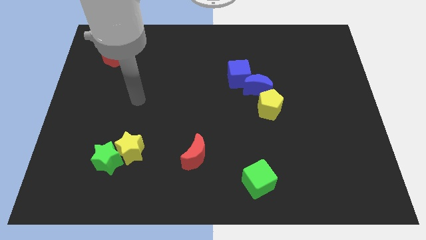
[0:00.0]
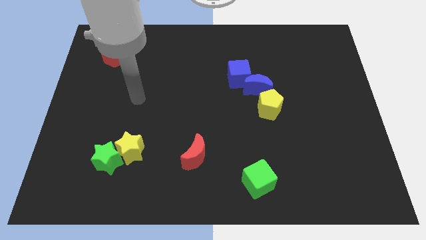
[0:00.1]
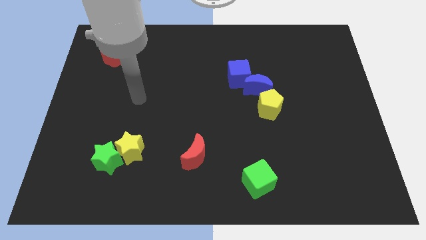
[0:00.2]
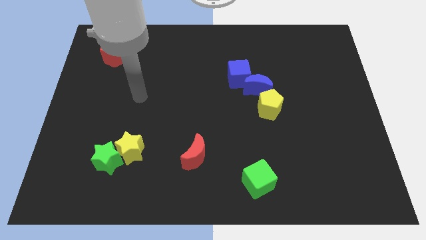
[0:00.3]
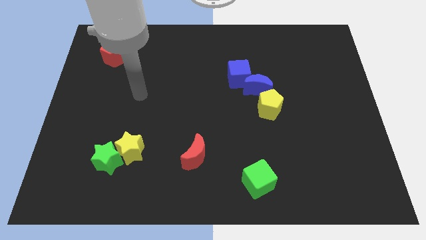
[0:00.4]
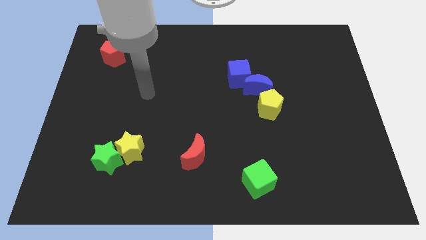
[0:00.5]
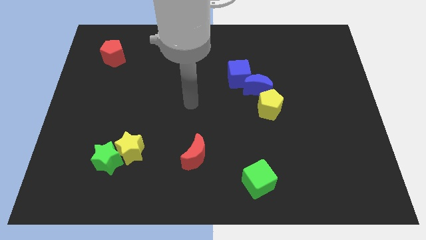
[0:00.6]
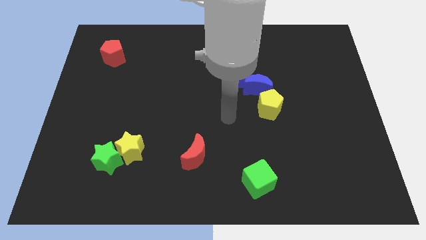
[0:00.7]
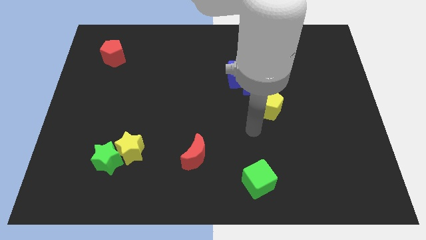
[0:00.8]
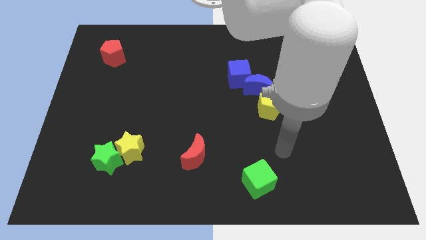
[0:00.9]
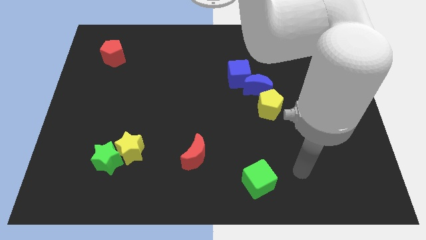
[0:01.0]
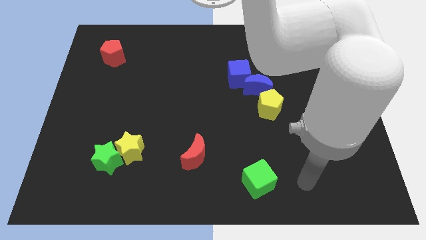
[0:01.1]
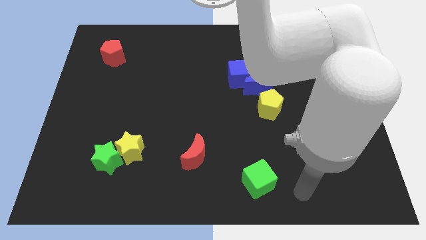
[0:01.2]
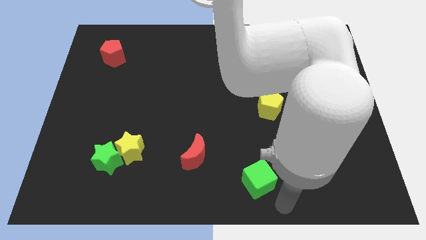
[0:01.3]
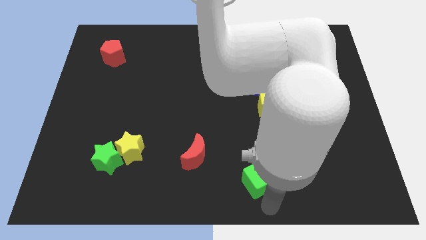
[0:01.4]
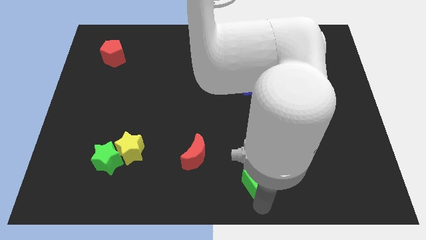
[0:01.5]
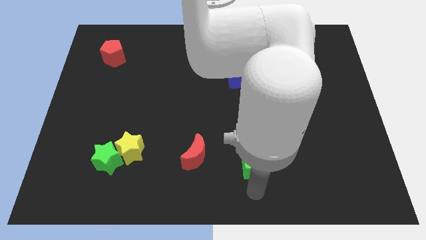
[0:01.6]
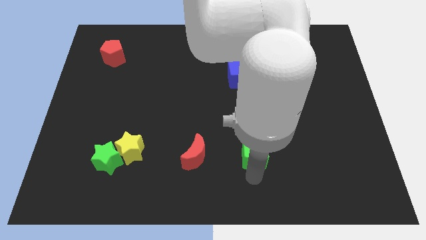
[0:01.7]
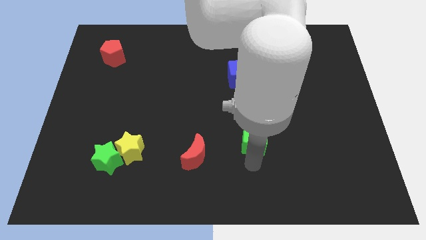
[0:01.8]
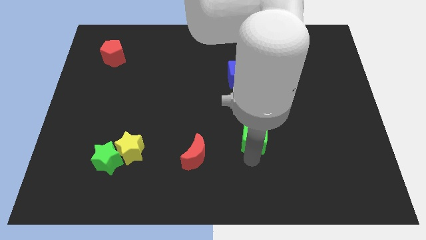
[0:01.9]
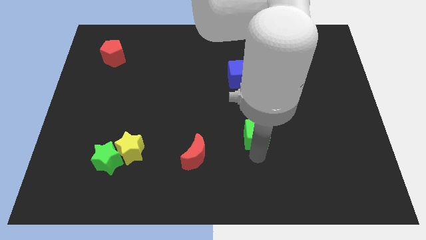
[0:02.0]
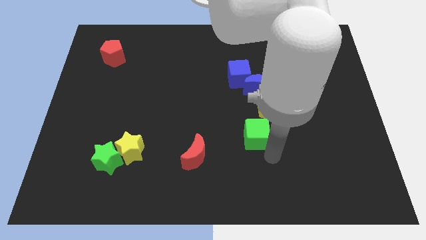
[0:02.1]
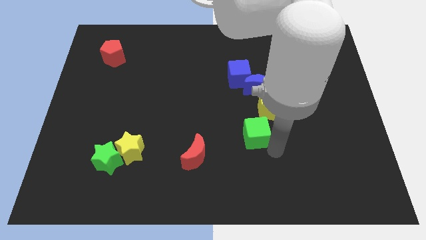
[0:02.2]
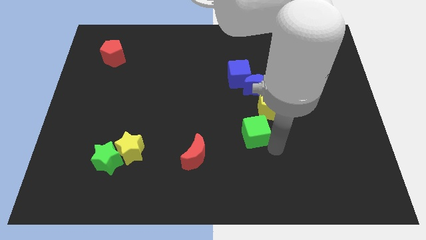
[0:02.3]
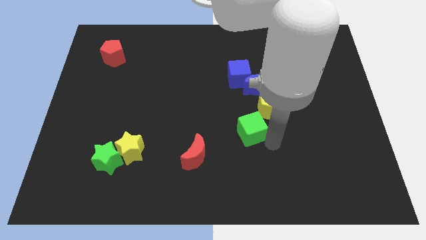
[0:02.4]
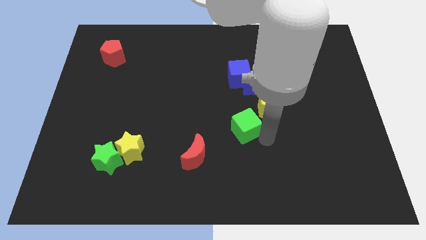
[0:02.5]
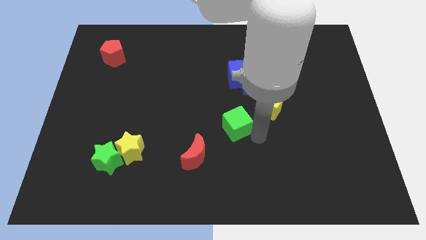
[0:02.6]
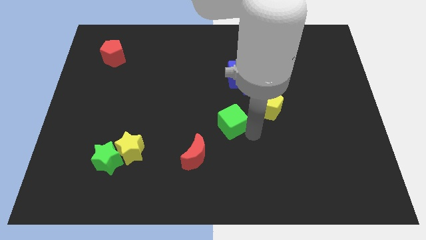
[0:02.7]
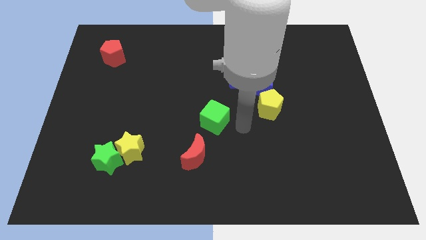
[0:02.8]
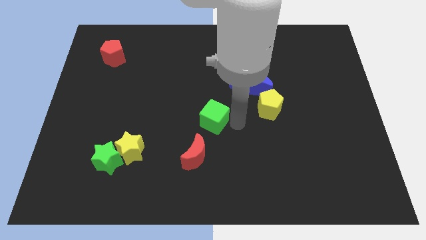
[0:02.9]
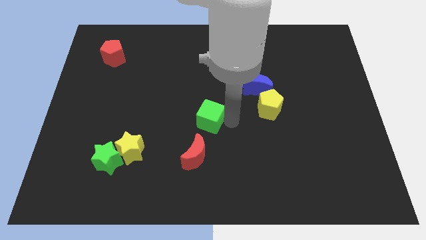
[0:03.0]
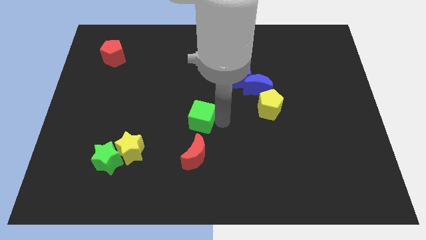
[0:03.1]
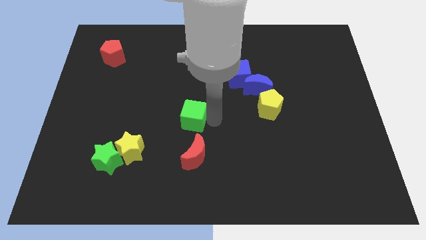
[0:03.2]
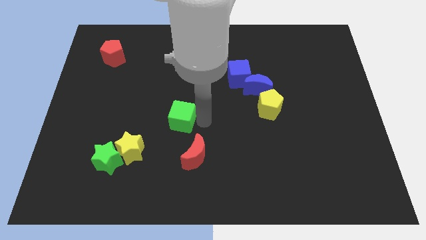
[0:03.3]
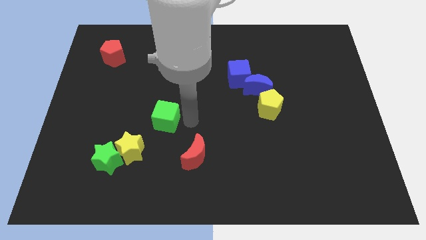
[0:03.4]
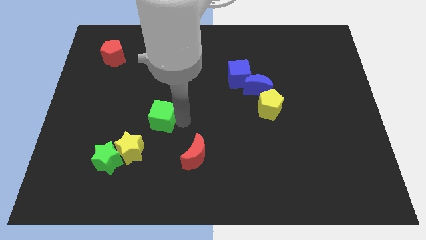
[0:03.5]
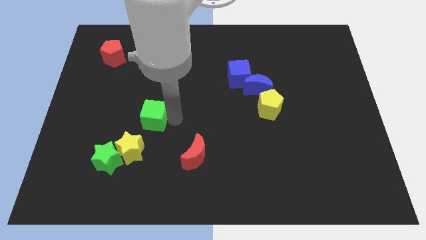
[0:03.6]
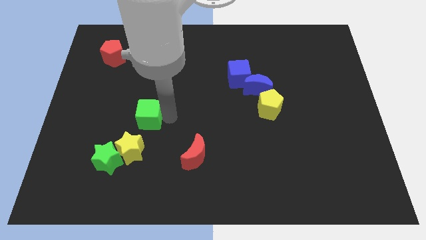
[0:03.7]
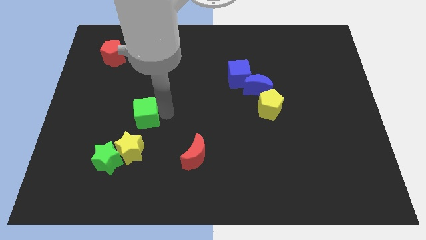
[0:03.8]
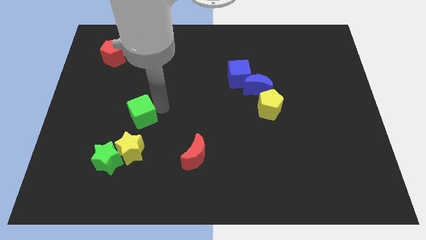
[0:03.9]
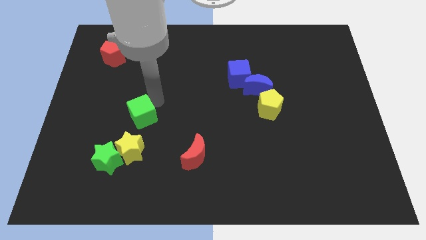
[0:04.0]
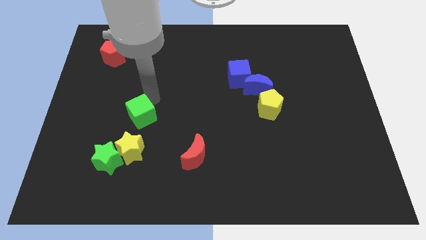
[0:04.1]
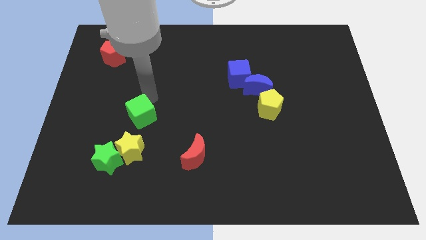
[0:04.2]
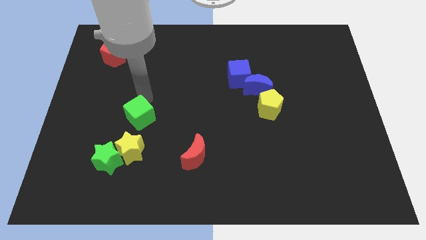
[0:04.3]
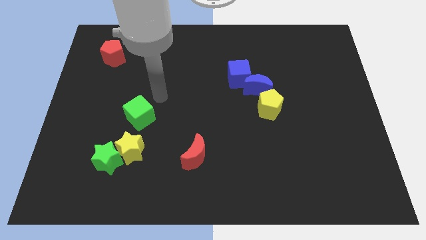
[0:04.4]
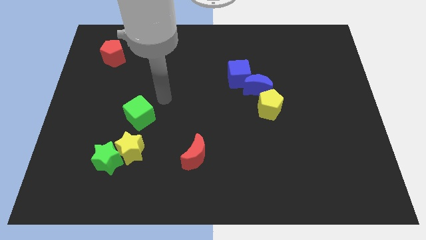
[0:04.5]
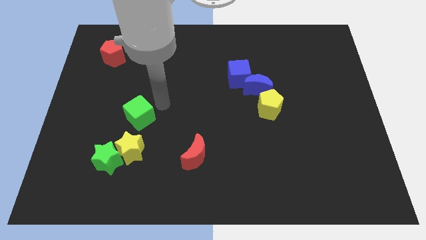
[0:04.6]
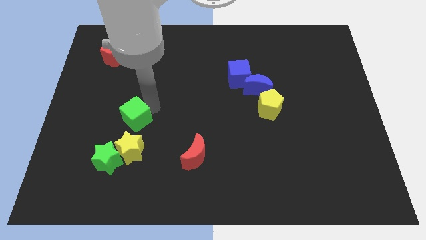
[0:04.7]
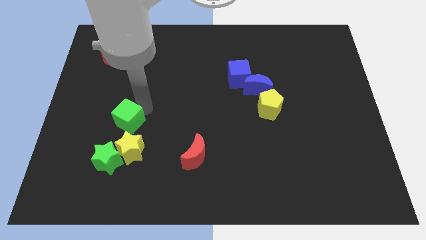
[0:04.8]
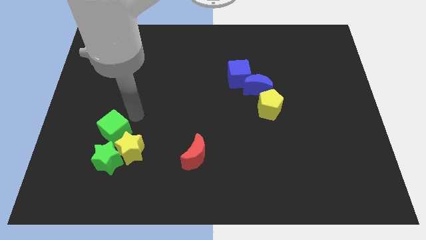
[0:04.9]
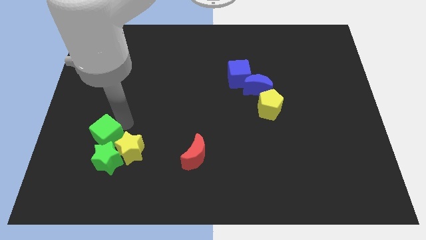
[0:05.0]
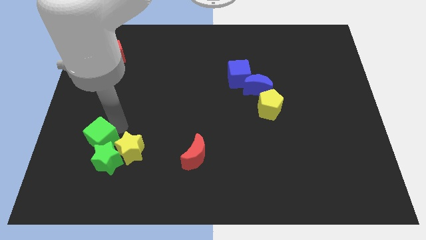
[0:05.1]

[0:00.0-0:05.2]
slide the green cube towards the green star

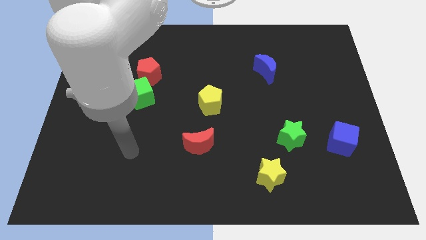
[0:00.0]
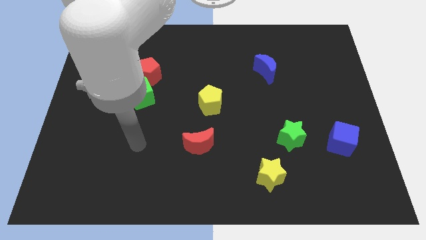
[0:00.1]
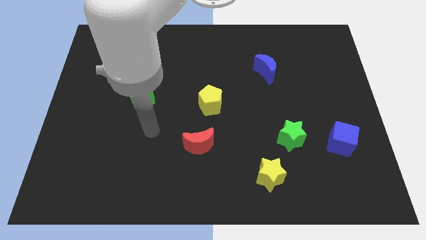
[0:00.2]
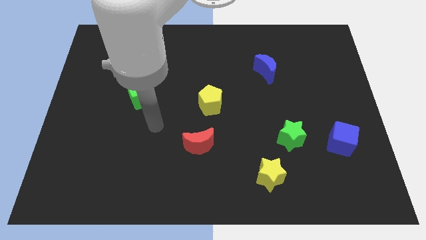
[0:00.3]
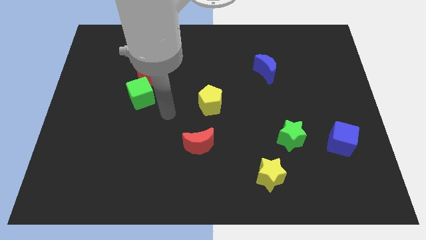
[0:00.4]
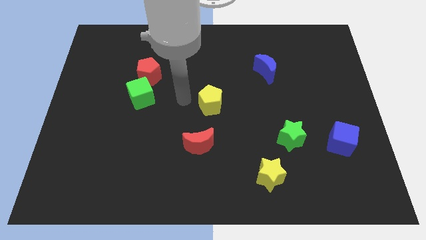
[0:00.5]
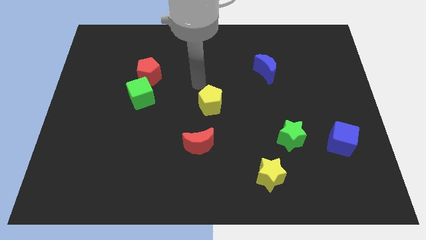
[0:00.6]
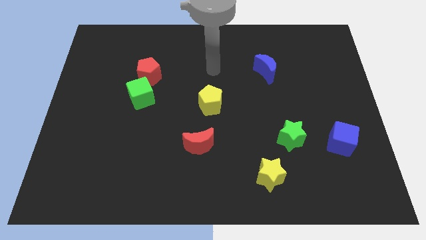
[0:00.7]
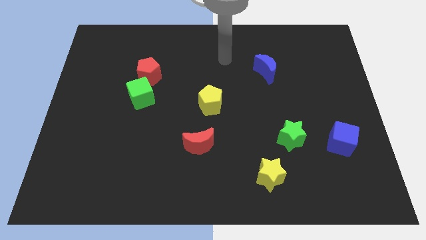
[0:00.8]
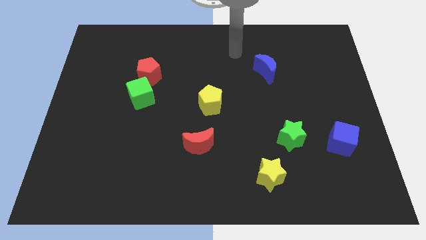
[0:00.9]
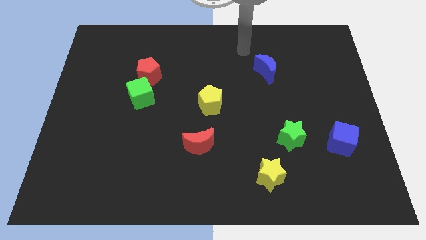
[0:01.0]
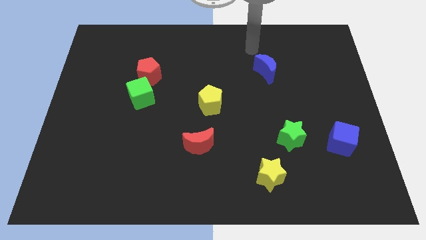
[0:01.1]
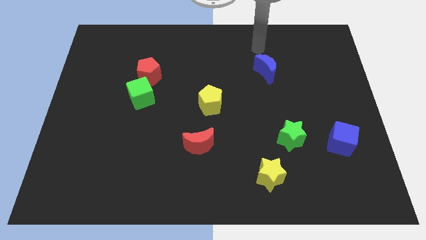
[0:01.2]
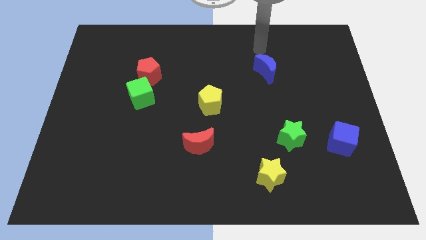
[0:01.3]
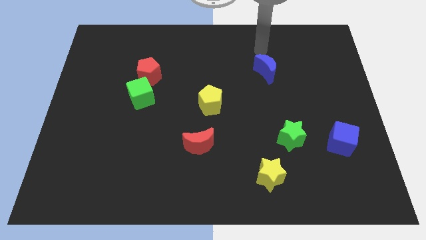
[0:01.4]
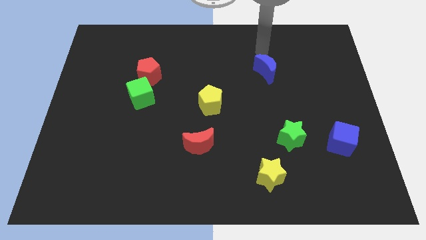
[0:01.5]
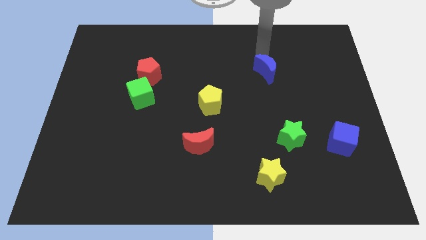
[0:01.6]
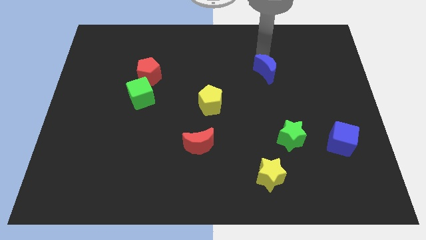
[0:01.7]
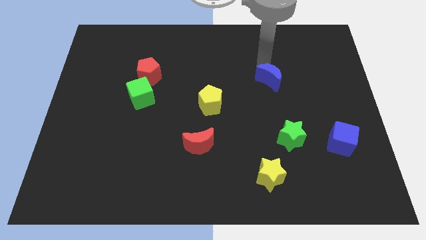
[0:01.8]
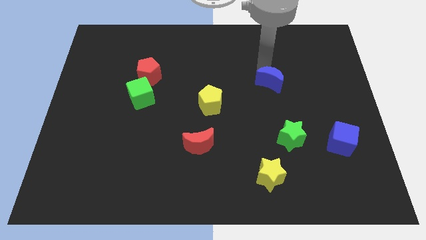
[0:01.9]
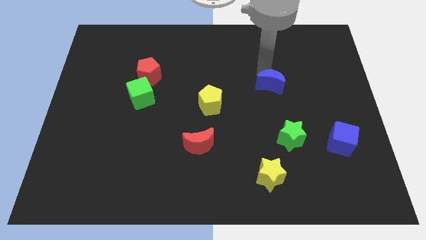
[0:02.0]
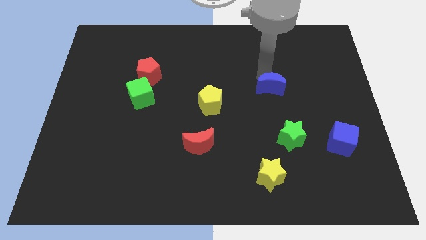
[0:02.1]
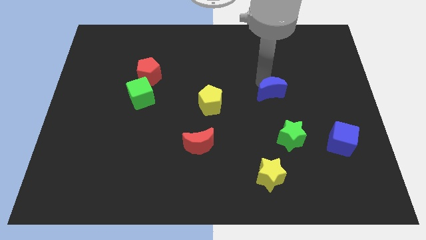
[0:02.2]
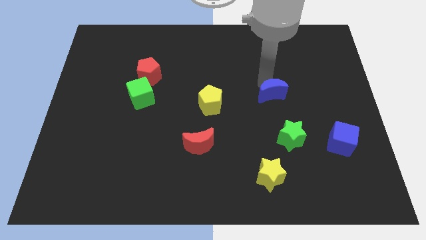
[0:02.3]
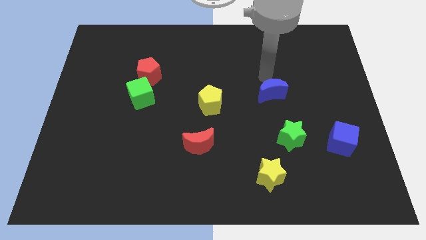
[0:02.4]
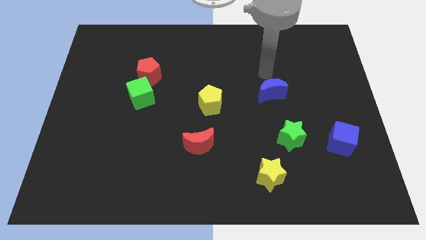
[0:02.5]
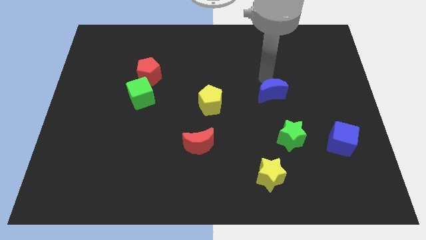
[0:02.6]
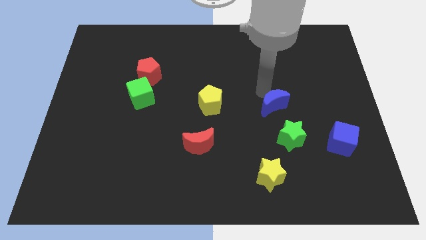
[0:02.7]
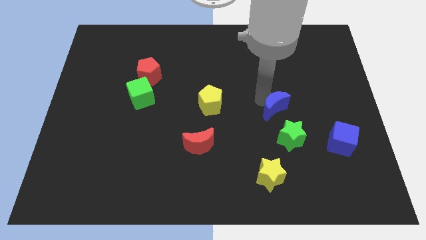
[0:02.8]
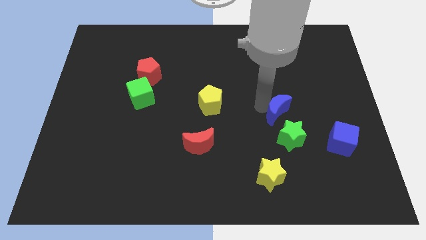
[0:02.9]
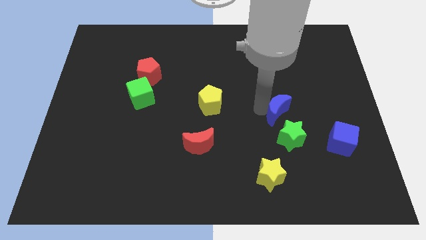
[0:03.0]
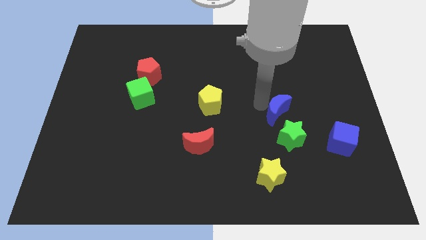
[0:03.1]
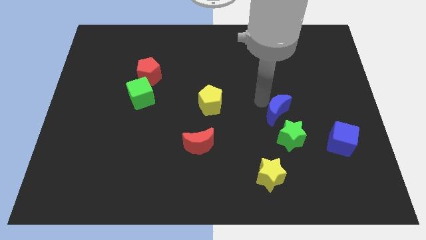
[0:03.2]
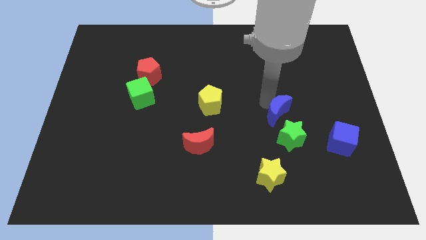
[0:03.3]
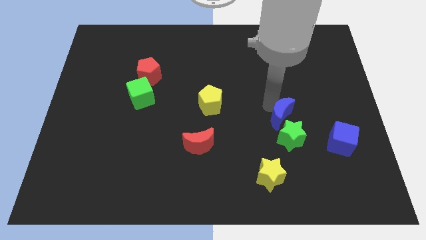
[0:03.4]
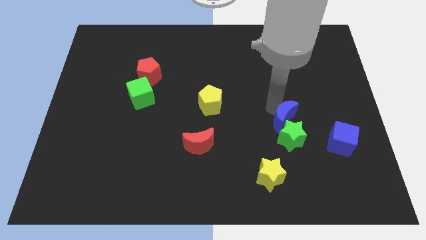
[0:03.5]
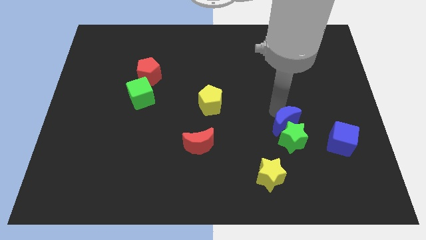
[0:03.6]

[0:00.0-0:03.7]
push the blue moon close to the green star

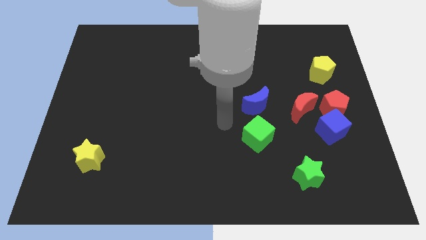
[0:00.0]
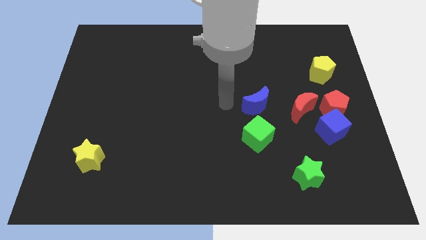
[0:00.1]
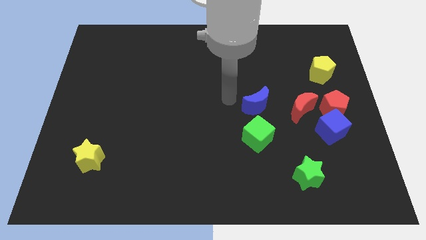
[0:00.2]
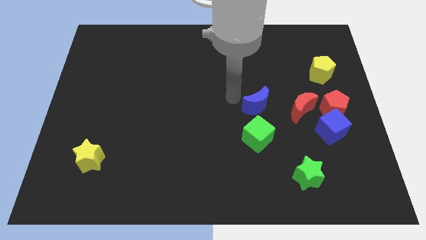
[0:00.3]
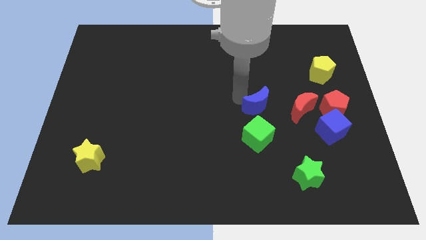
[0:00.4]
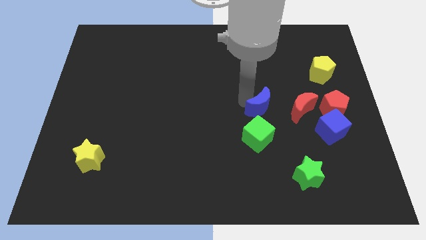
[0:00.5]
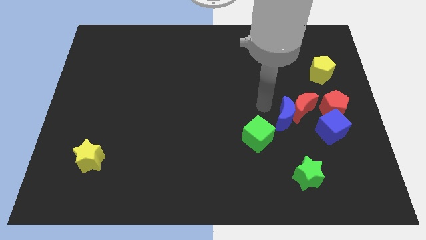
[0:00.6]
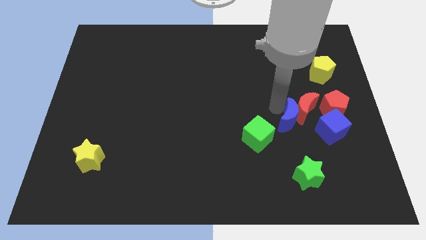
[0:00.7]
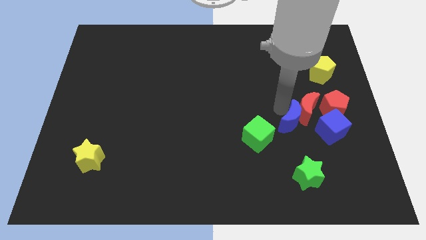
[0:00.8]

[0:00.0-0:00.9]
slide the blue moon to the red moon
